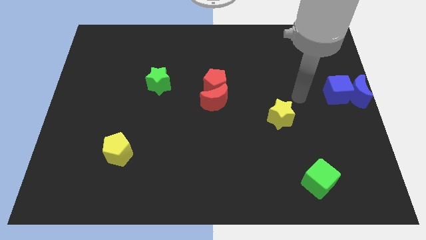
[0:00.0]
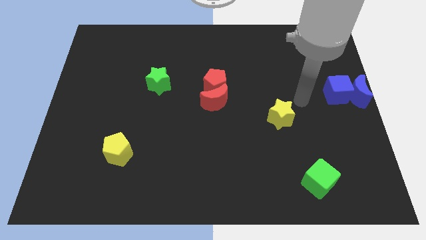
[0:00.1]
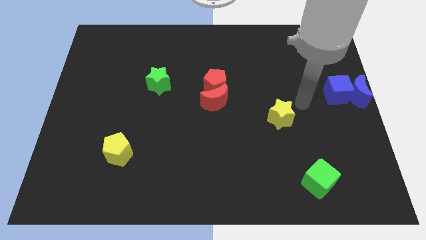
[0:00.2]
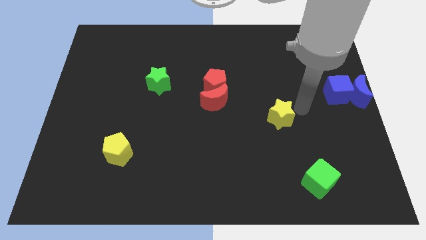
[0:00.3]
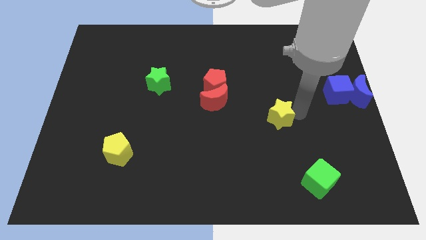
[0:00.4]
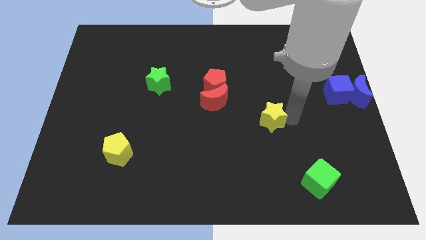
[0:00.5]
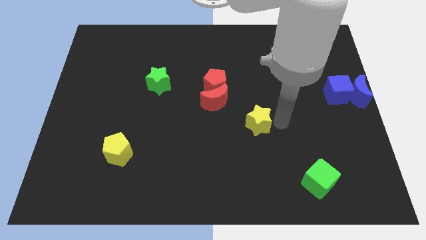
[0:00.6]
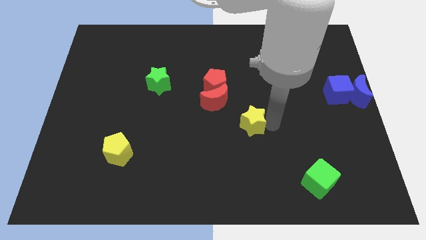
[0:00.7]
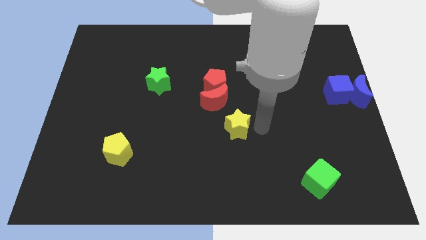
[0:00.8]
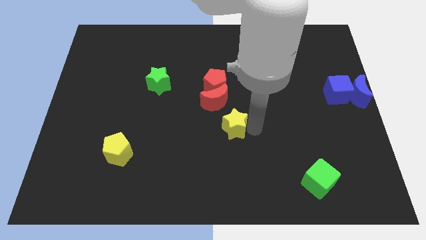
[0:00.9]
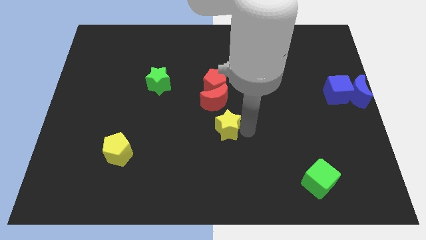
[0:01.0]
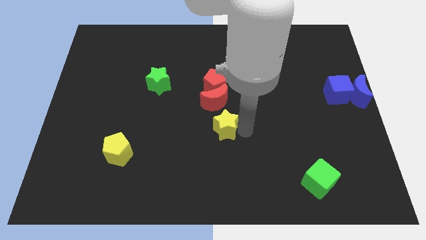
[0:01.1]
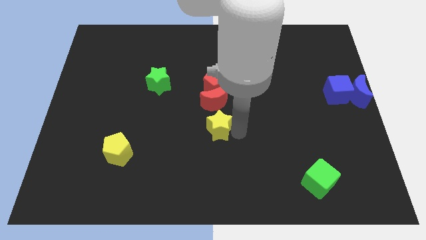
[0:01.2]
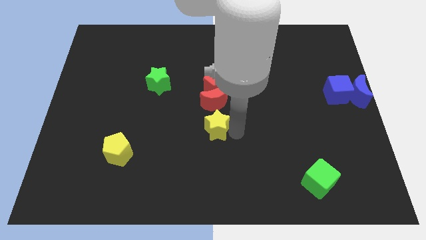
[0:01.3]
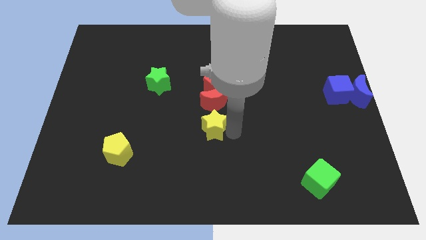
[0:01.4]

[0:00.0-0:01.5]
place the yellow star below the red moon

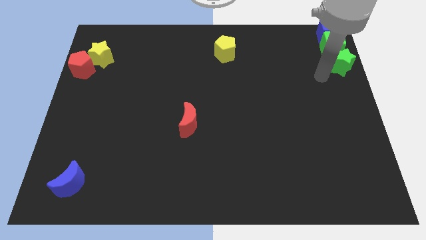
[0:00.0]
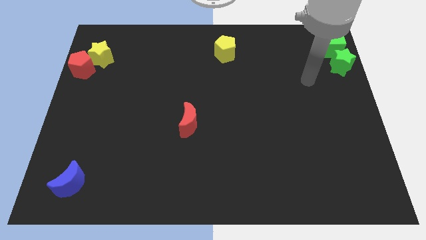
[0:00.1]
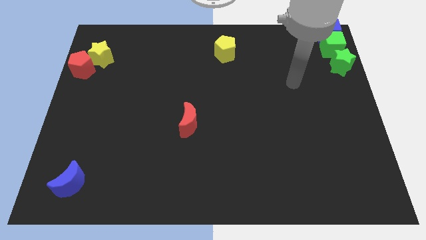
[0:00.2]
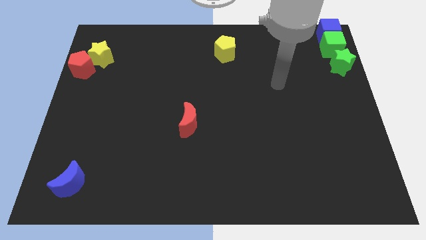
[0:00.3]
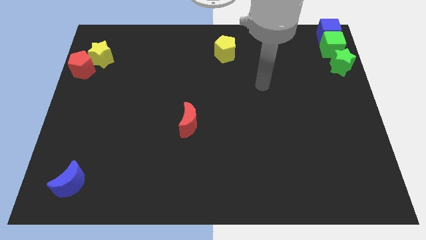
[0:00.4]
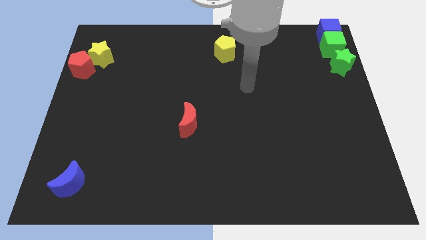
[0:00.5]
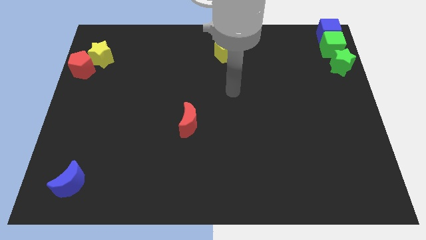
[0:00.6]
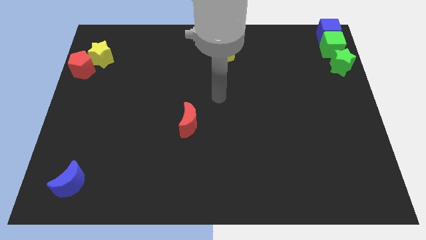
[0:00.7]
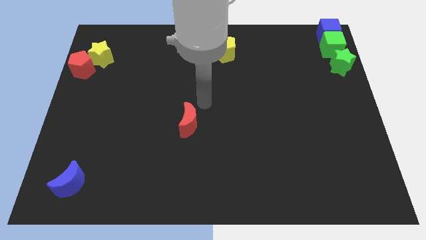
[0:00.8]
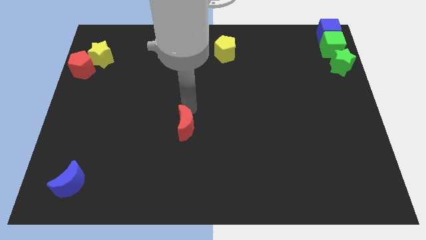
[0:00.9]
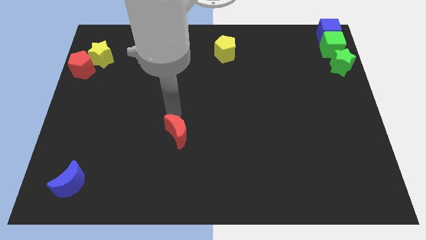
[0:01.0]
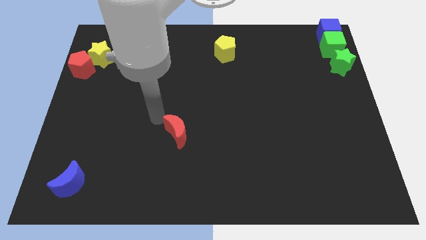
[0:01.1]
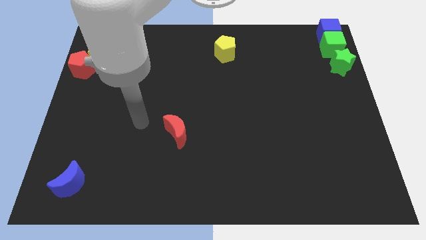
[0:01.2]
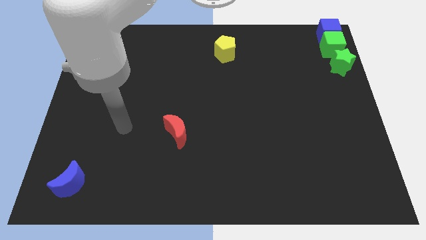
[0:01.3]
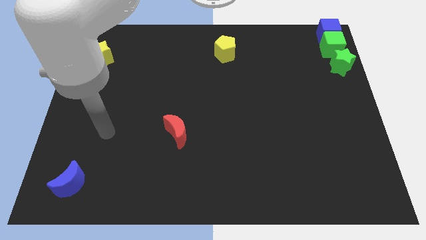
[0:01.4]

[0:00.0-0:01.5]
move the arm away from the green star

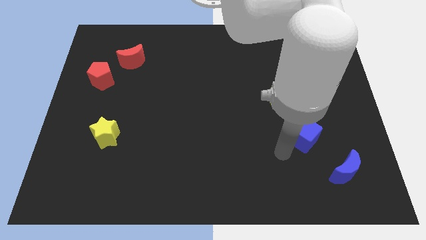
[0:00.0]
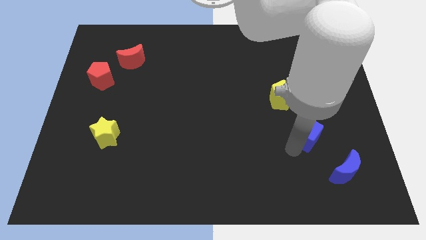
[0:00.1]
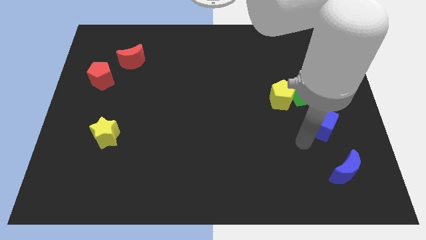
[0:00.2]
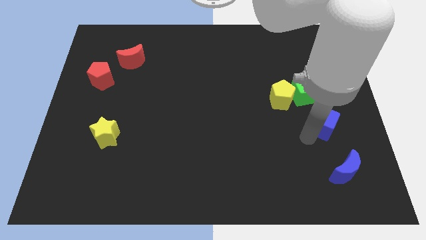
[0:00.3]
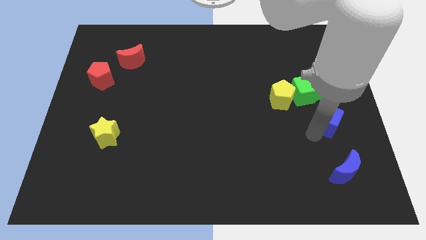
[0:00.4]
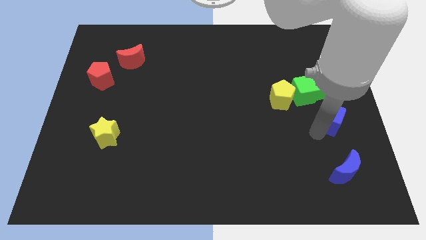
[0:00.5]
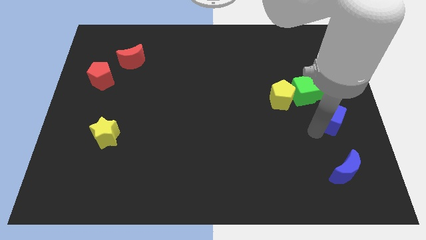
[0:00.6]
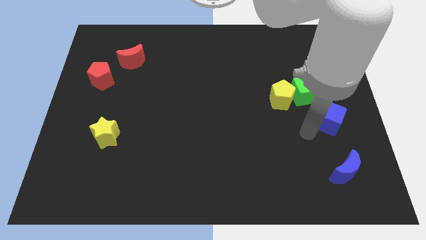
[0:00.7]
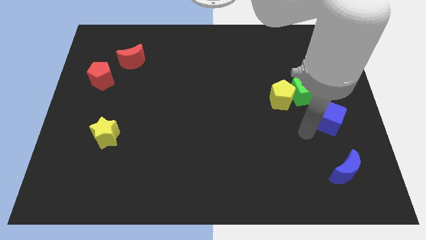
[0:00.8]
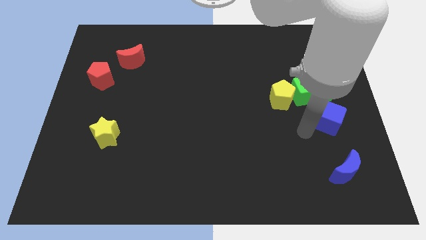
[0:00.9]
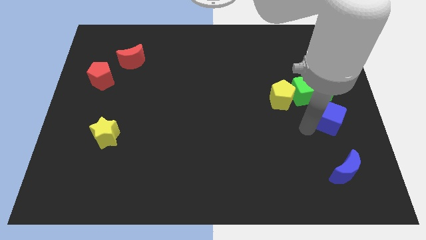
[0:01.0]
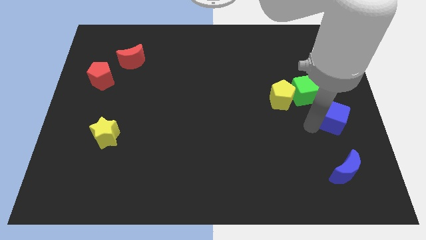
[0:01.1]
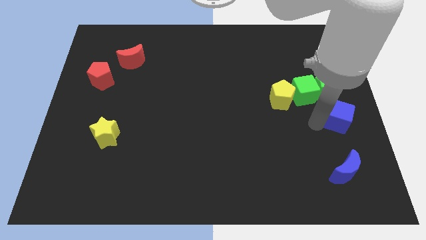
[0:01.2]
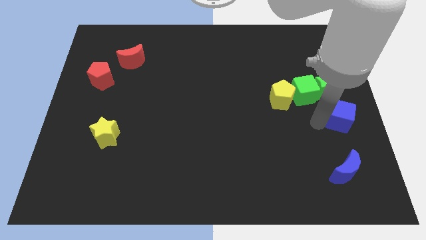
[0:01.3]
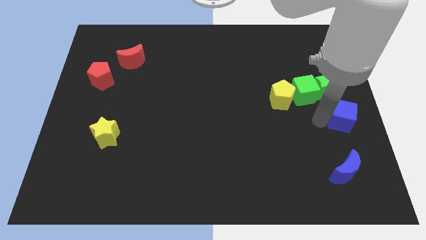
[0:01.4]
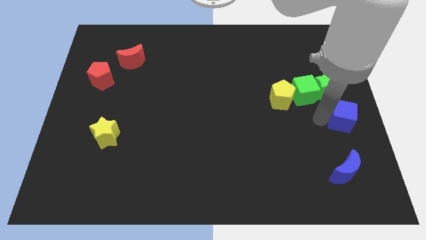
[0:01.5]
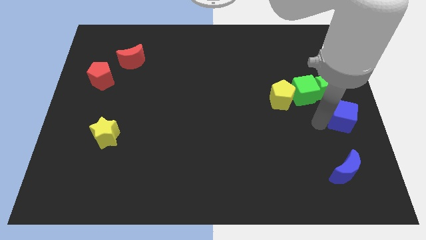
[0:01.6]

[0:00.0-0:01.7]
place the blue cube below the green star

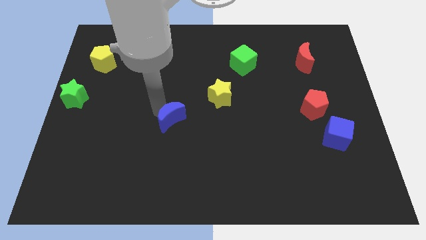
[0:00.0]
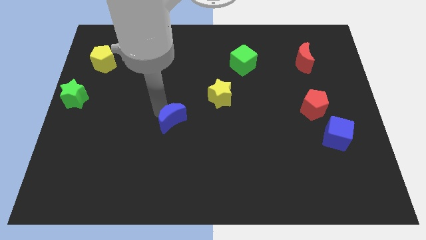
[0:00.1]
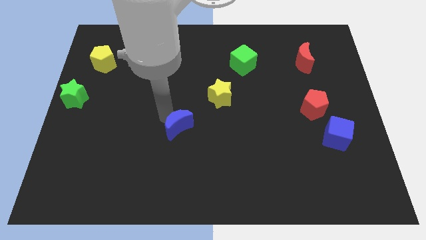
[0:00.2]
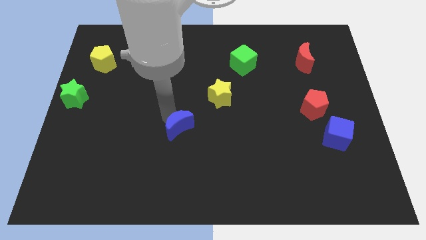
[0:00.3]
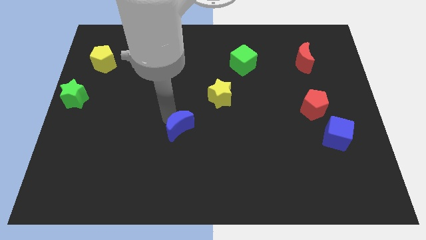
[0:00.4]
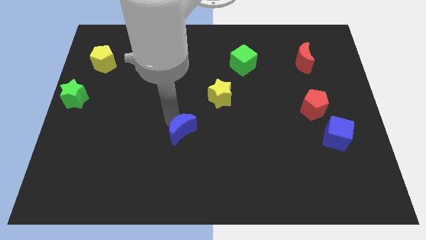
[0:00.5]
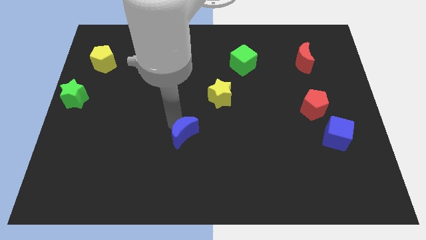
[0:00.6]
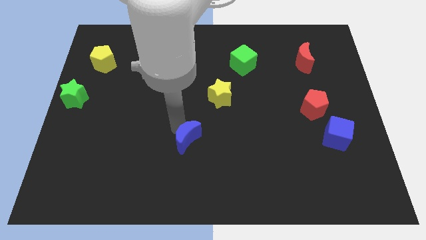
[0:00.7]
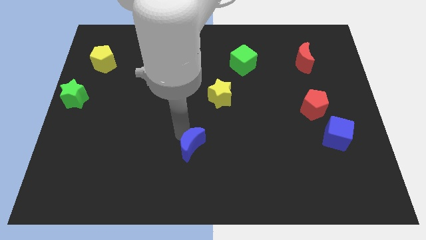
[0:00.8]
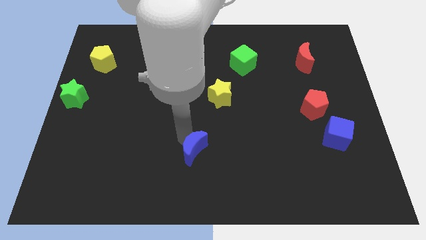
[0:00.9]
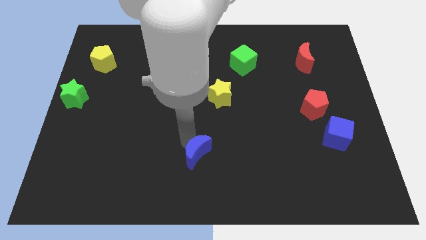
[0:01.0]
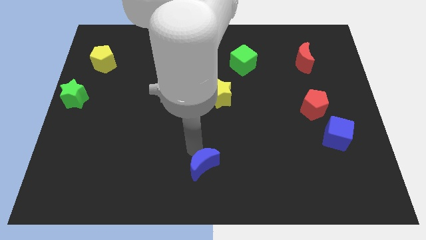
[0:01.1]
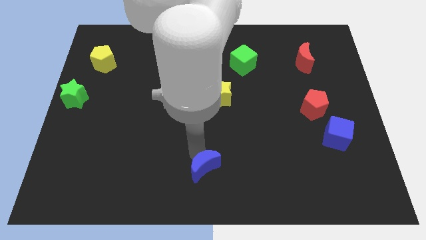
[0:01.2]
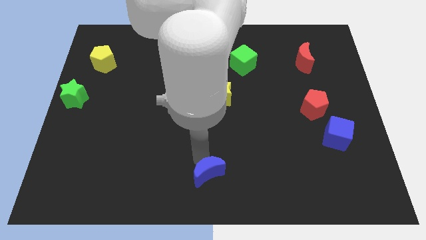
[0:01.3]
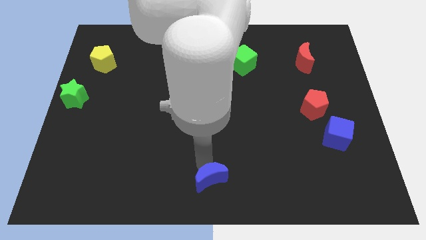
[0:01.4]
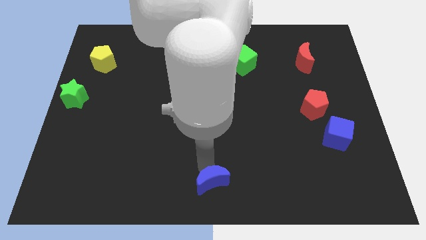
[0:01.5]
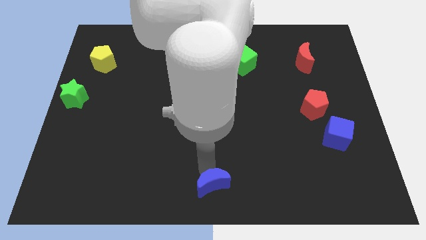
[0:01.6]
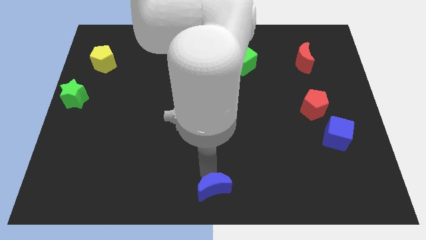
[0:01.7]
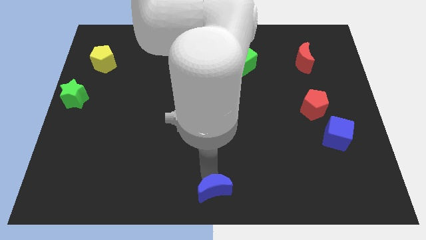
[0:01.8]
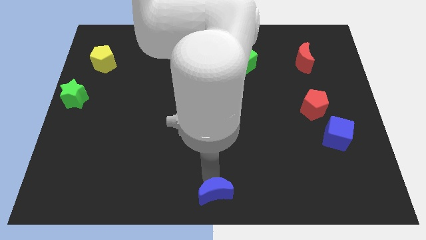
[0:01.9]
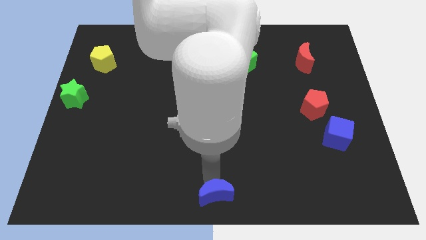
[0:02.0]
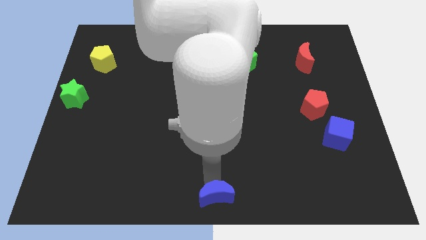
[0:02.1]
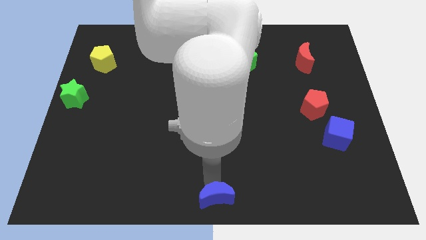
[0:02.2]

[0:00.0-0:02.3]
push the blue moon downward

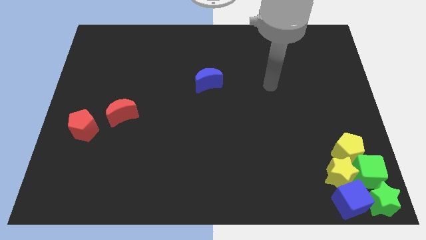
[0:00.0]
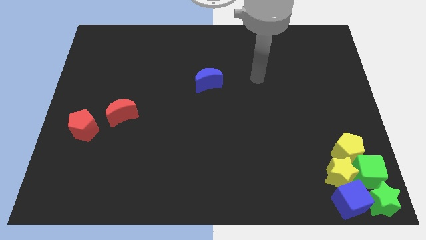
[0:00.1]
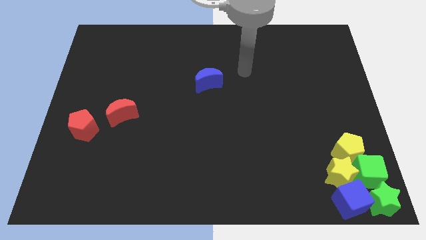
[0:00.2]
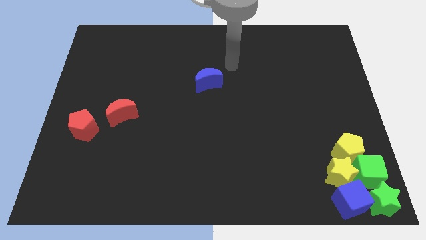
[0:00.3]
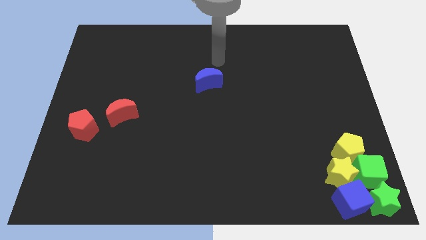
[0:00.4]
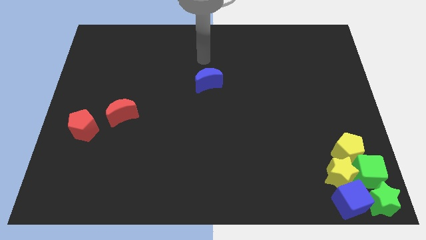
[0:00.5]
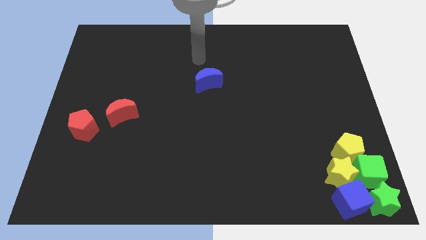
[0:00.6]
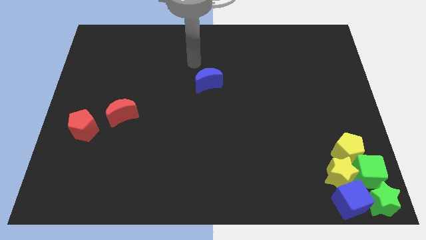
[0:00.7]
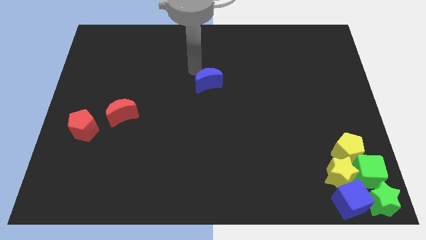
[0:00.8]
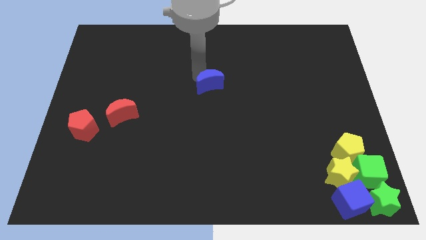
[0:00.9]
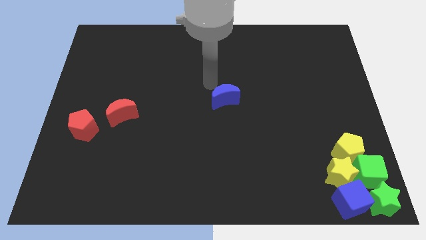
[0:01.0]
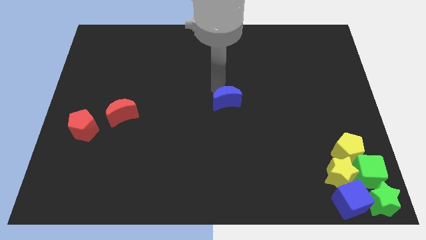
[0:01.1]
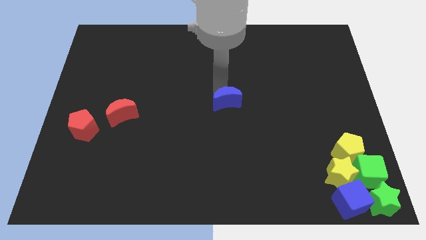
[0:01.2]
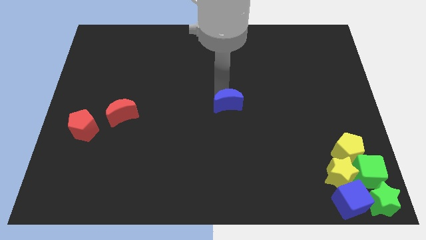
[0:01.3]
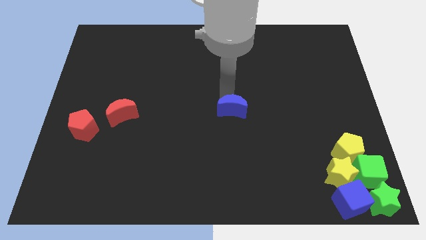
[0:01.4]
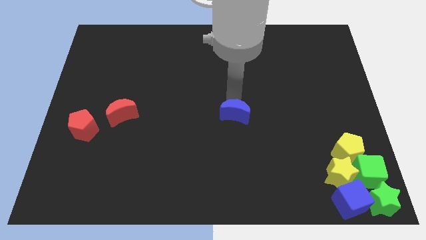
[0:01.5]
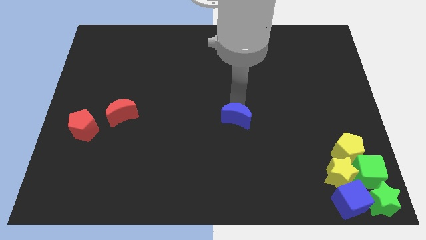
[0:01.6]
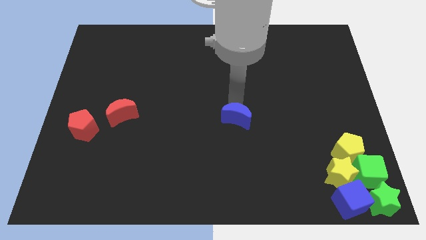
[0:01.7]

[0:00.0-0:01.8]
slide the blue moon towards the center of the board

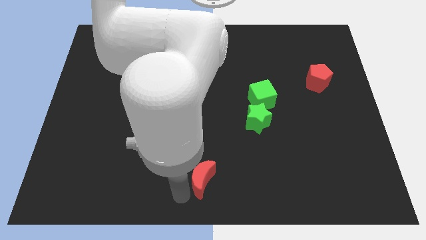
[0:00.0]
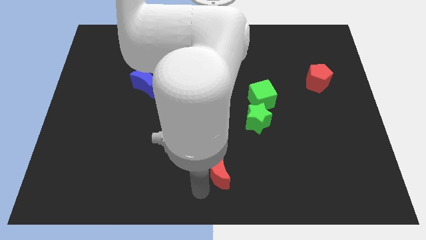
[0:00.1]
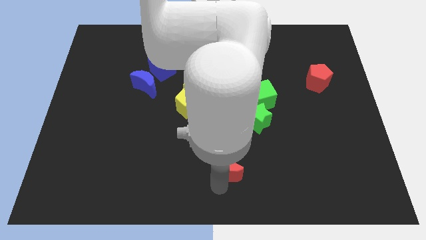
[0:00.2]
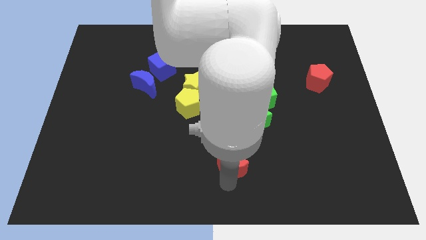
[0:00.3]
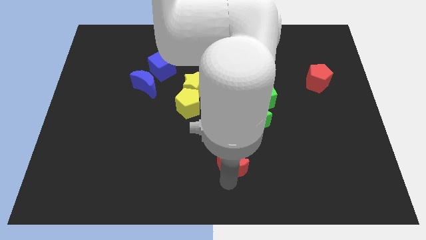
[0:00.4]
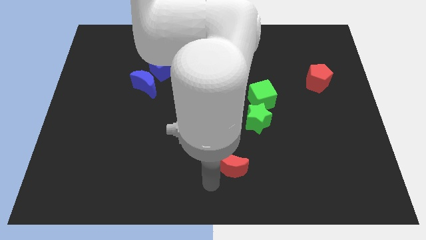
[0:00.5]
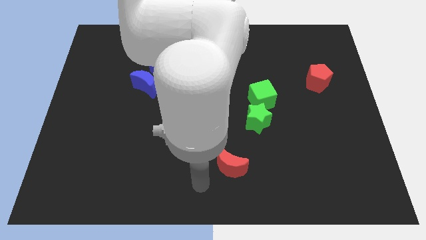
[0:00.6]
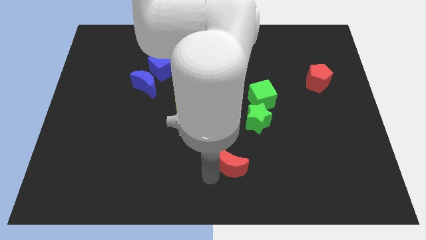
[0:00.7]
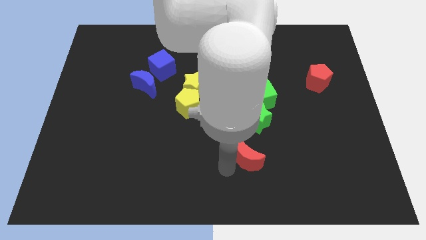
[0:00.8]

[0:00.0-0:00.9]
place the red moon below the green star
